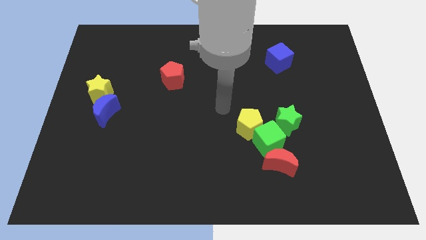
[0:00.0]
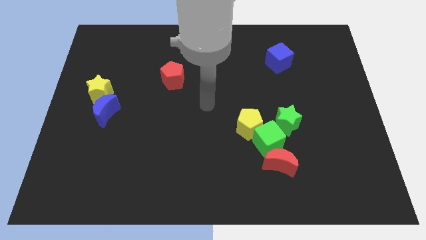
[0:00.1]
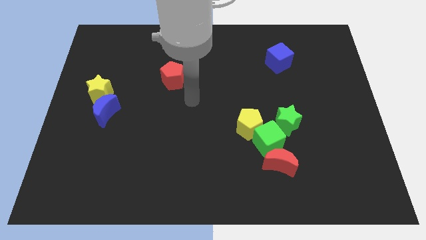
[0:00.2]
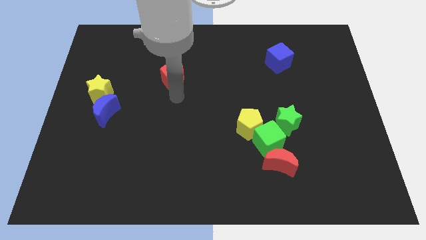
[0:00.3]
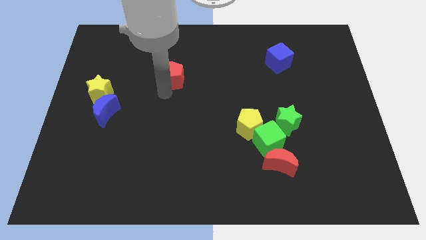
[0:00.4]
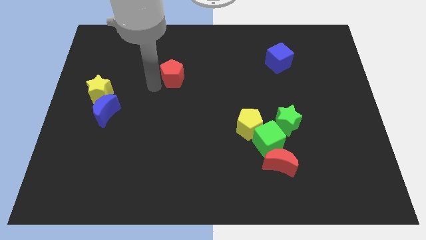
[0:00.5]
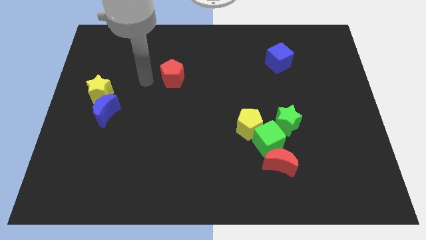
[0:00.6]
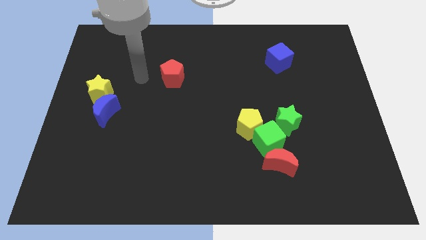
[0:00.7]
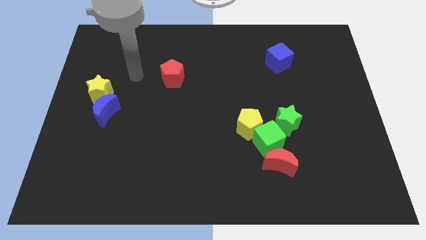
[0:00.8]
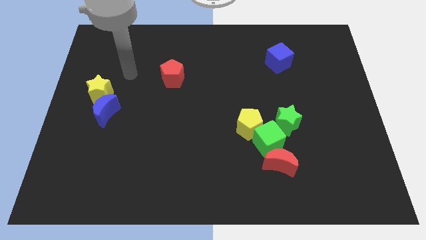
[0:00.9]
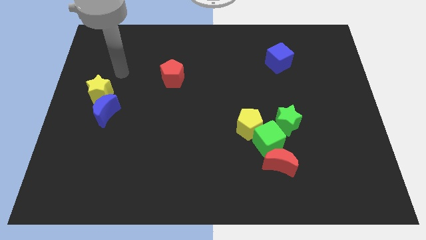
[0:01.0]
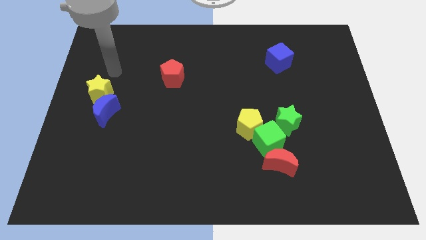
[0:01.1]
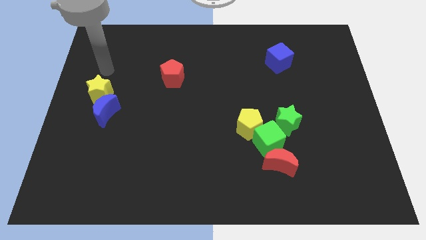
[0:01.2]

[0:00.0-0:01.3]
slightly move the red pentagon to the right of the board

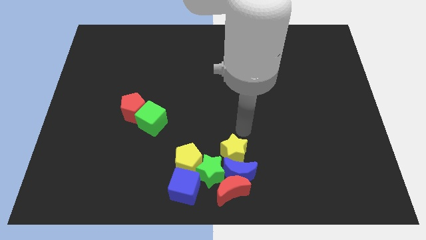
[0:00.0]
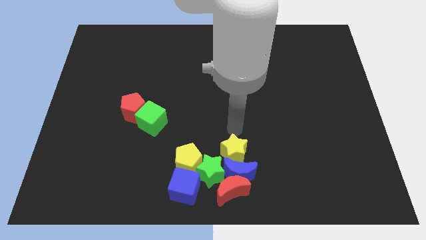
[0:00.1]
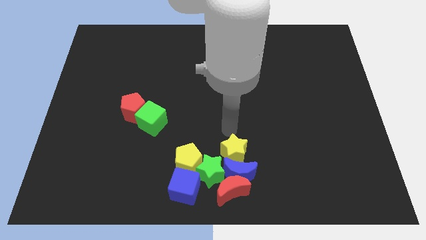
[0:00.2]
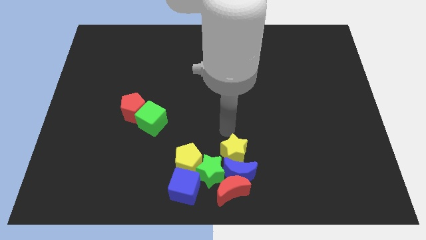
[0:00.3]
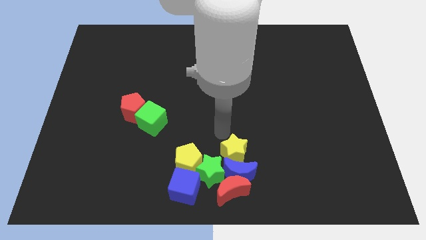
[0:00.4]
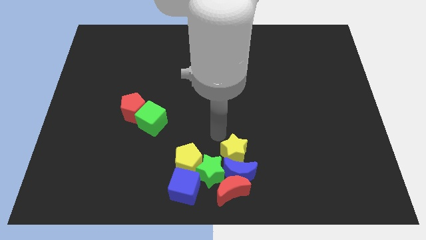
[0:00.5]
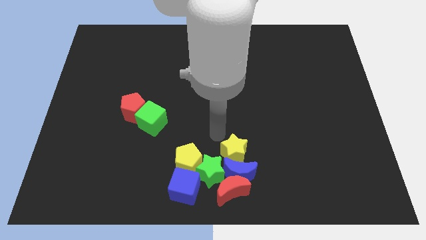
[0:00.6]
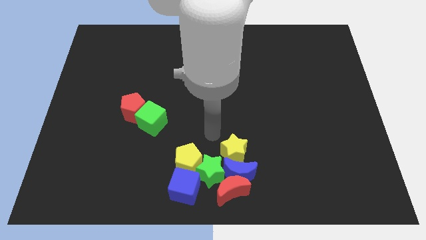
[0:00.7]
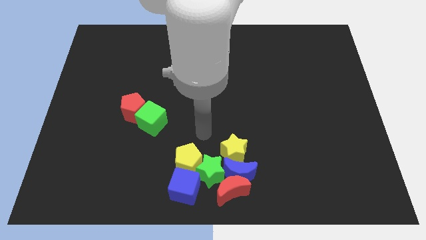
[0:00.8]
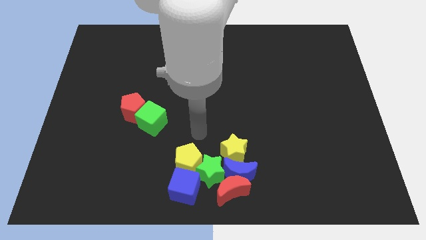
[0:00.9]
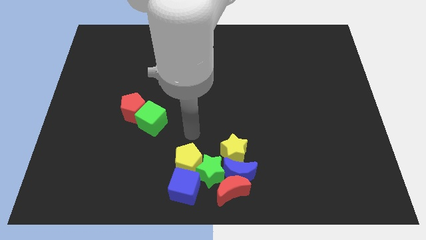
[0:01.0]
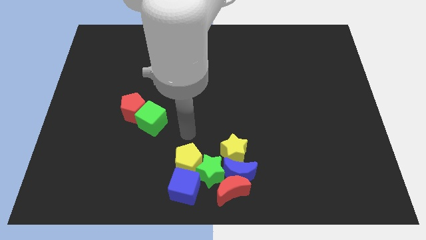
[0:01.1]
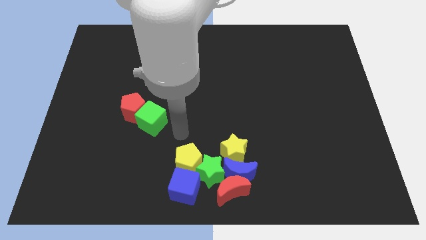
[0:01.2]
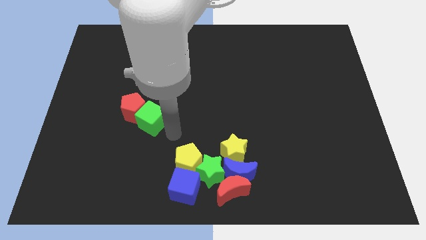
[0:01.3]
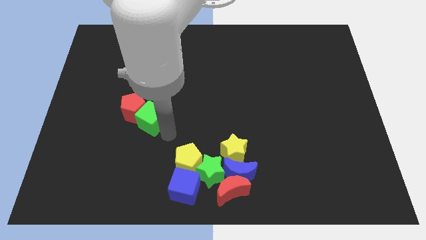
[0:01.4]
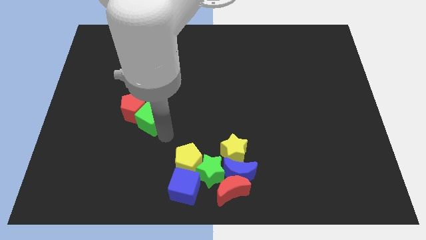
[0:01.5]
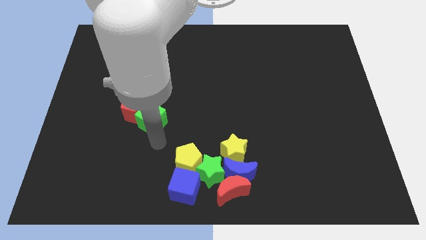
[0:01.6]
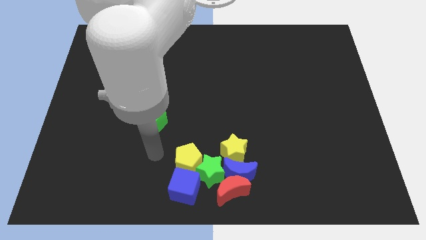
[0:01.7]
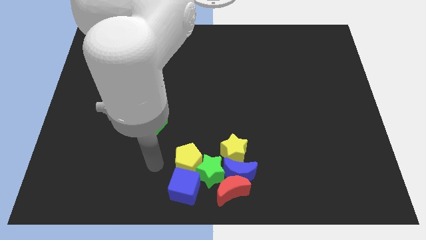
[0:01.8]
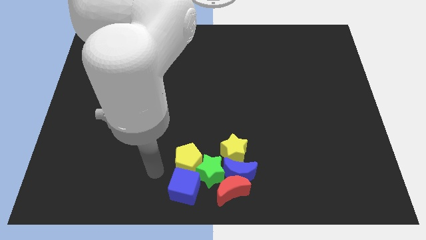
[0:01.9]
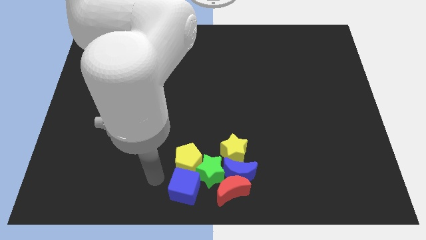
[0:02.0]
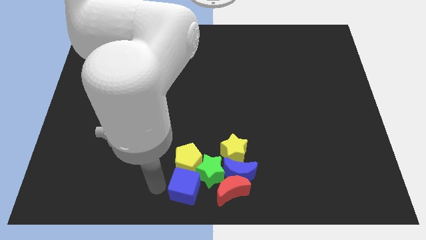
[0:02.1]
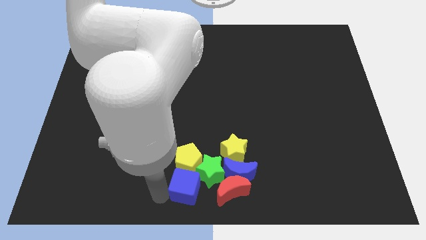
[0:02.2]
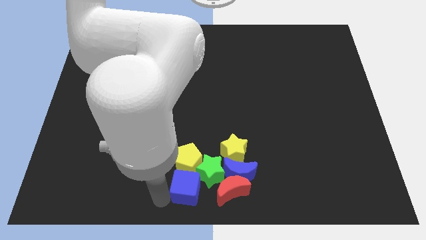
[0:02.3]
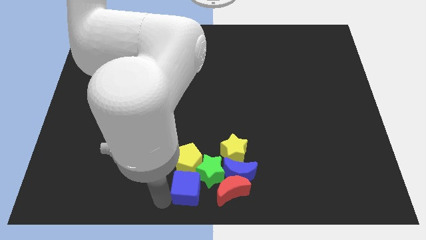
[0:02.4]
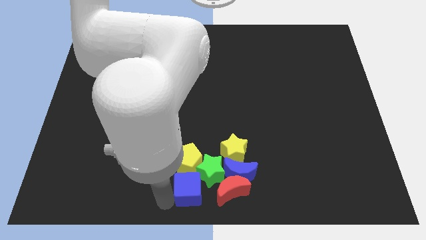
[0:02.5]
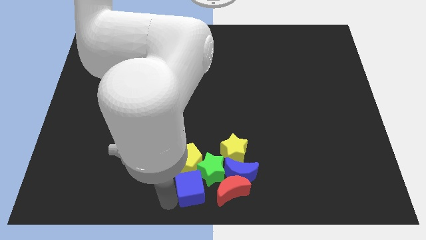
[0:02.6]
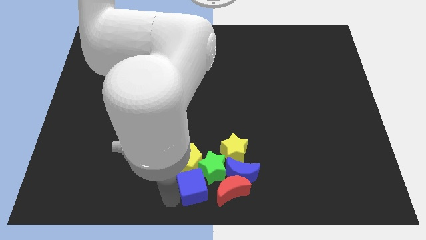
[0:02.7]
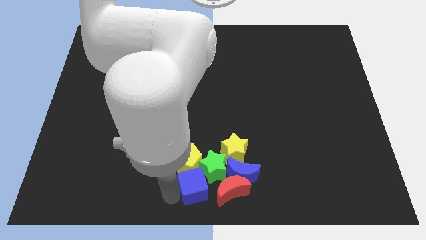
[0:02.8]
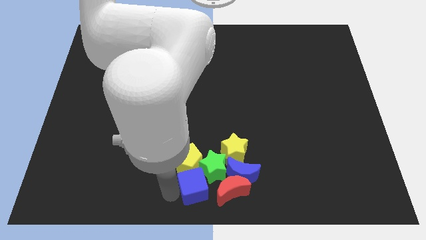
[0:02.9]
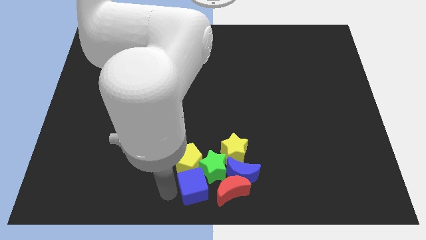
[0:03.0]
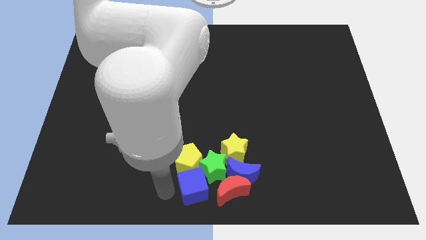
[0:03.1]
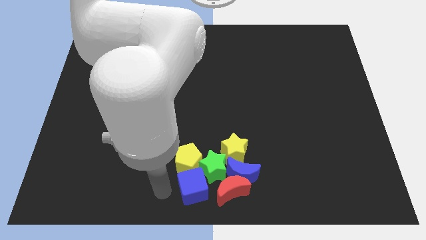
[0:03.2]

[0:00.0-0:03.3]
slightly move the blue cube into the group of blocks

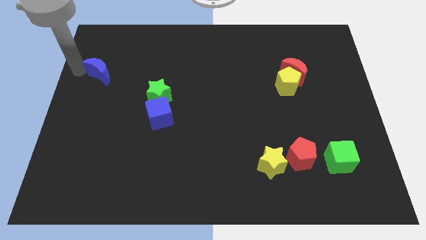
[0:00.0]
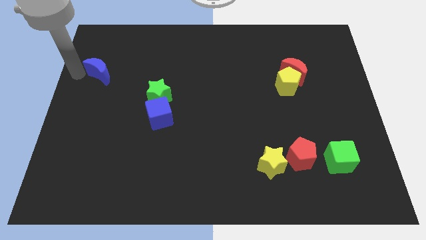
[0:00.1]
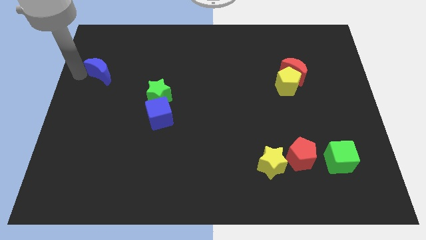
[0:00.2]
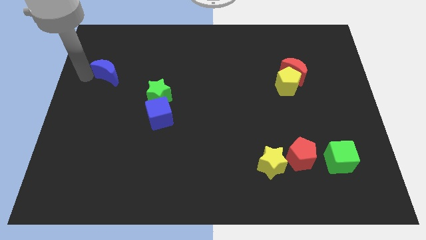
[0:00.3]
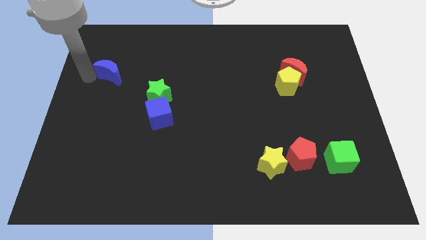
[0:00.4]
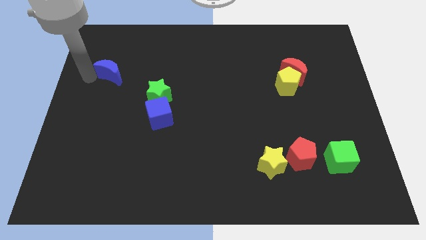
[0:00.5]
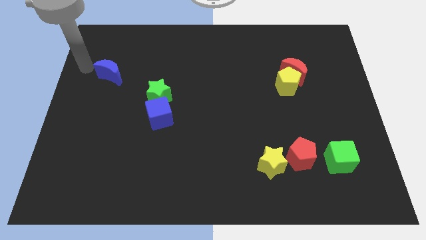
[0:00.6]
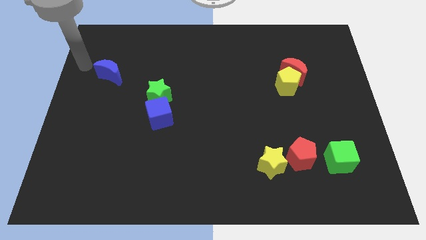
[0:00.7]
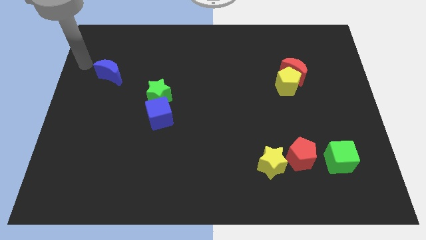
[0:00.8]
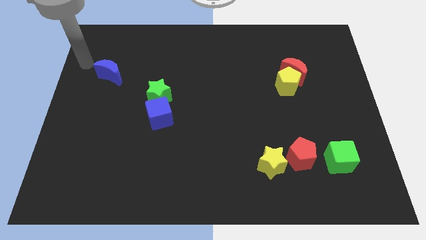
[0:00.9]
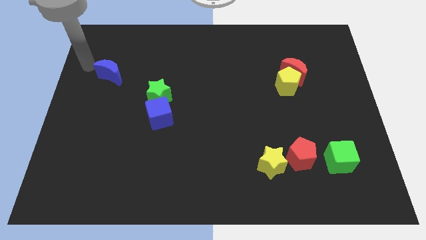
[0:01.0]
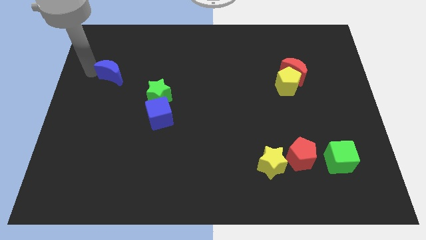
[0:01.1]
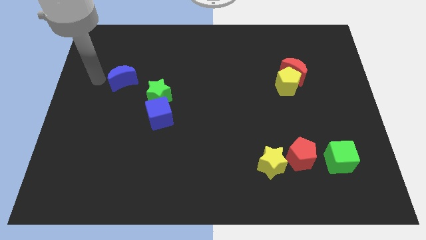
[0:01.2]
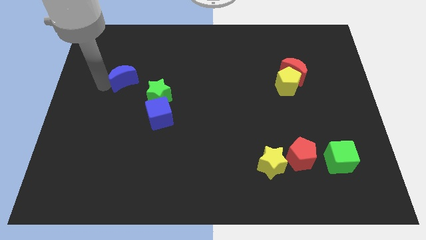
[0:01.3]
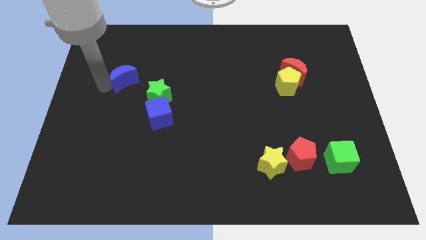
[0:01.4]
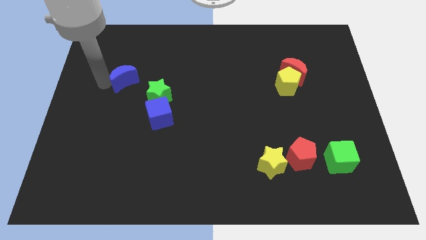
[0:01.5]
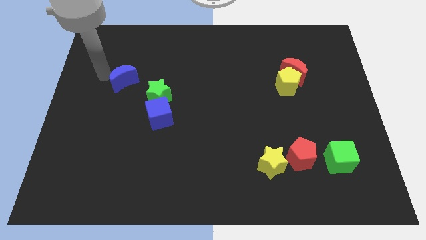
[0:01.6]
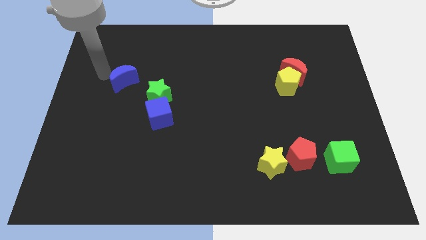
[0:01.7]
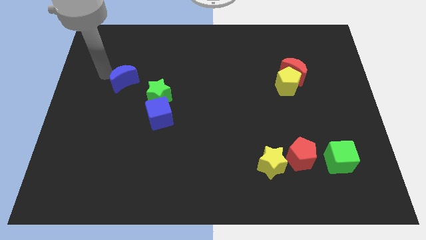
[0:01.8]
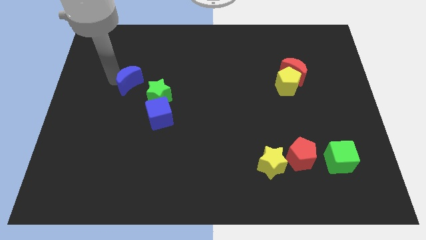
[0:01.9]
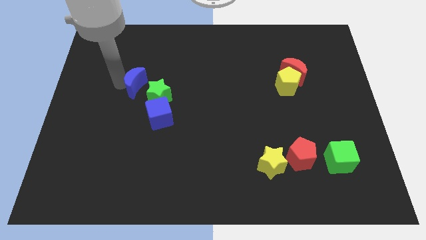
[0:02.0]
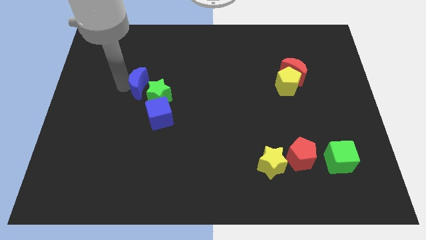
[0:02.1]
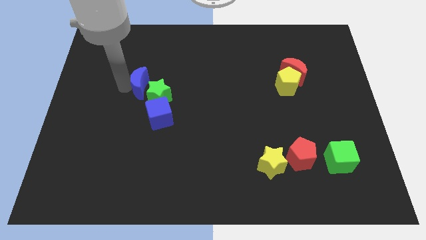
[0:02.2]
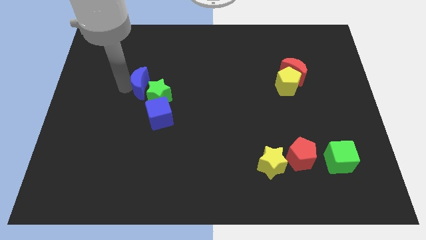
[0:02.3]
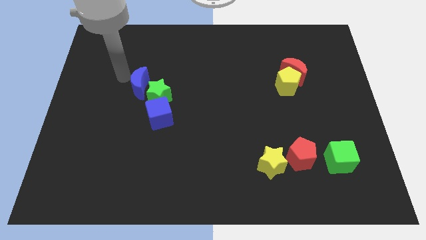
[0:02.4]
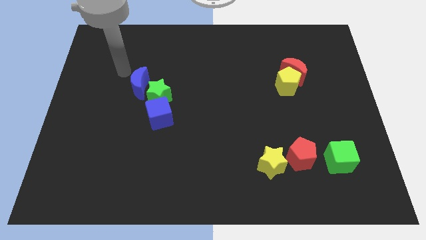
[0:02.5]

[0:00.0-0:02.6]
place the blue moon to the left of the green star

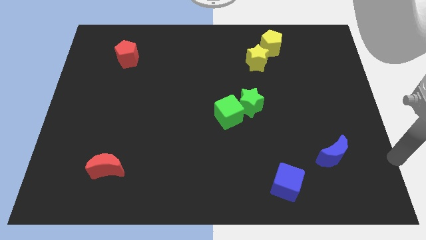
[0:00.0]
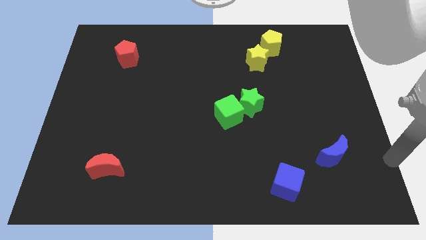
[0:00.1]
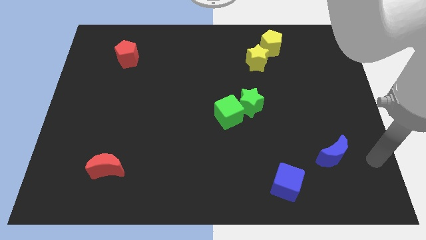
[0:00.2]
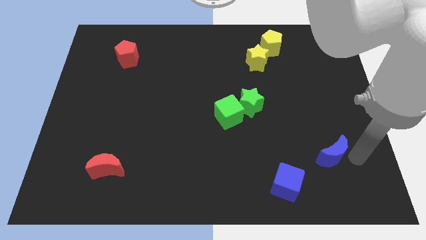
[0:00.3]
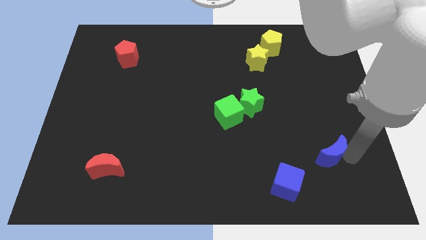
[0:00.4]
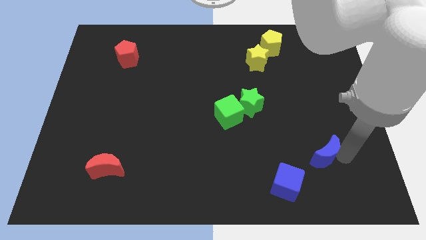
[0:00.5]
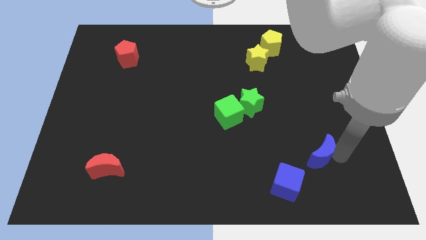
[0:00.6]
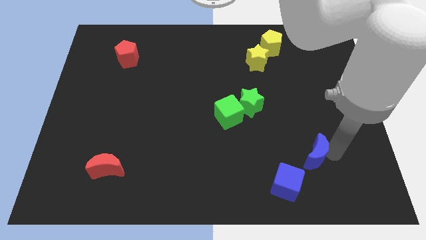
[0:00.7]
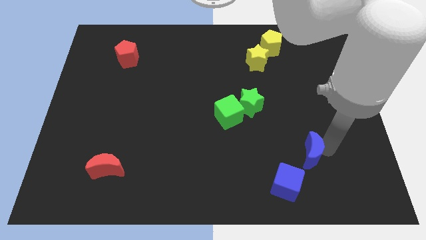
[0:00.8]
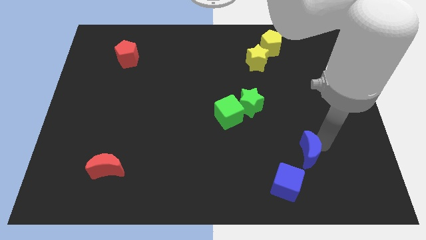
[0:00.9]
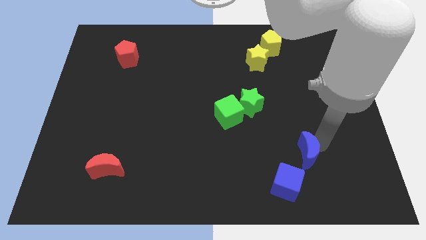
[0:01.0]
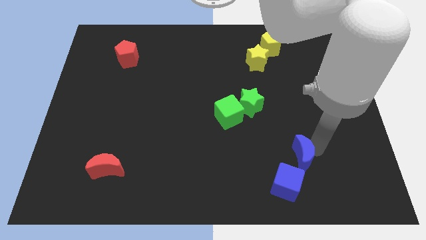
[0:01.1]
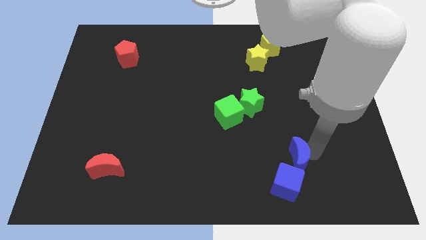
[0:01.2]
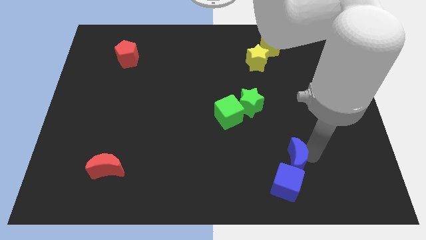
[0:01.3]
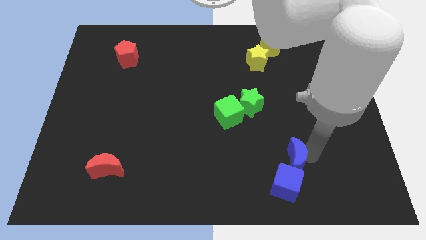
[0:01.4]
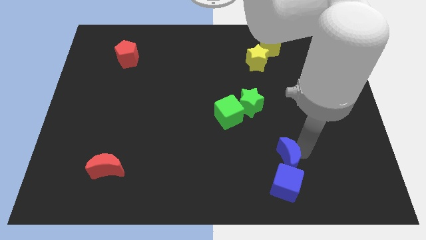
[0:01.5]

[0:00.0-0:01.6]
place blue crescent above the blue cube
